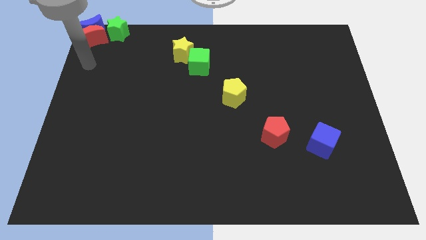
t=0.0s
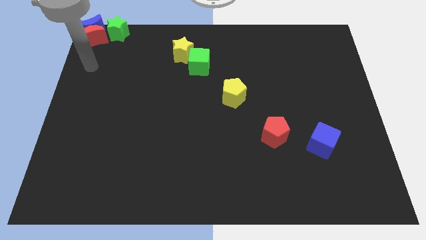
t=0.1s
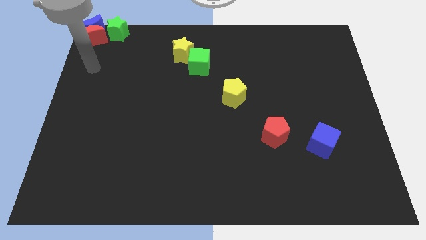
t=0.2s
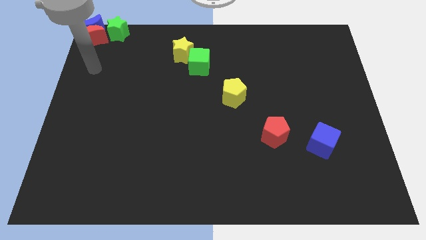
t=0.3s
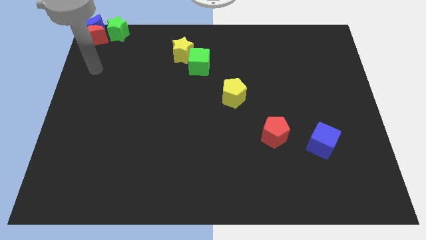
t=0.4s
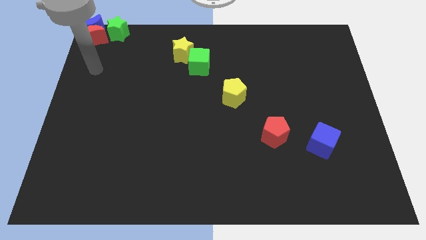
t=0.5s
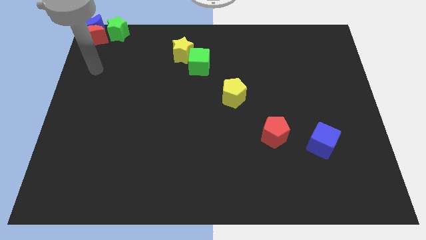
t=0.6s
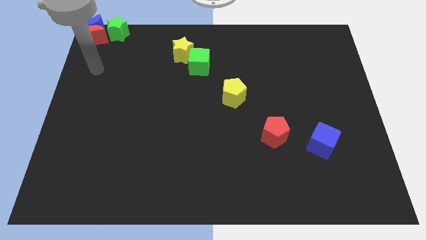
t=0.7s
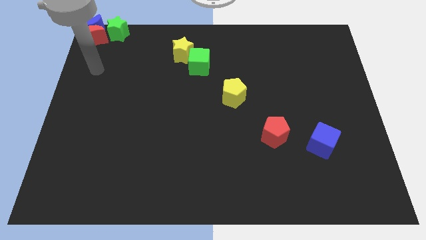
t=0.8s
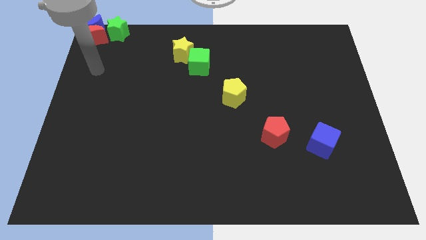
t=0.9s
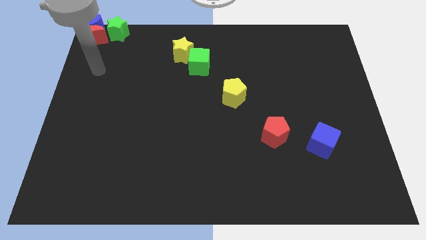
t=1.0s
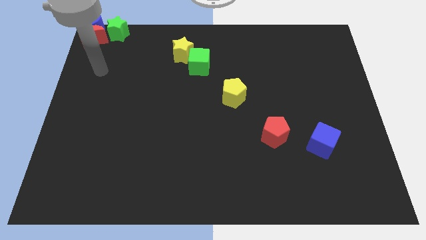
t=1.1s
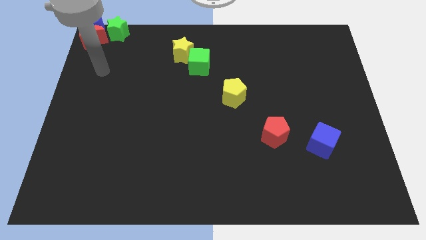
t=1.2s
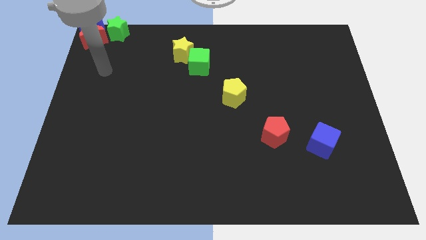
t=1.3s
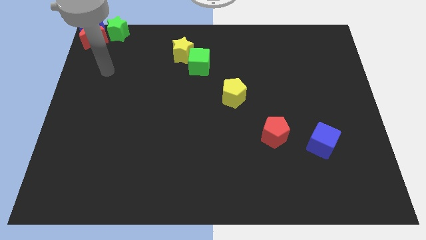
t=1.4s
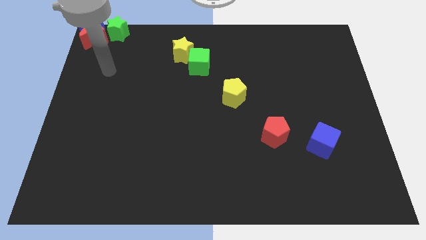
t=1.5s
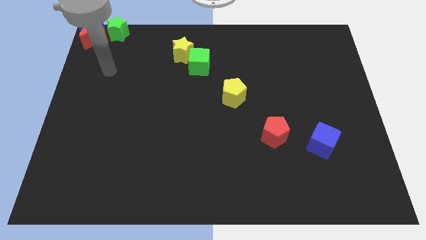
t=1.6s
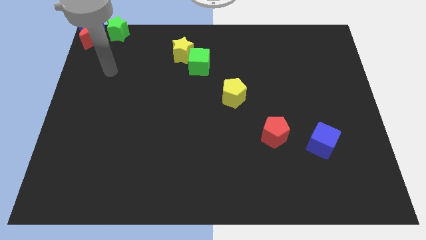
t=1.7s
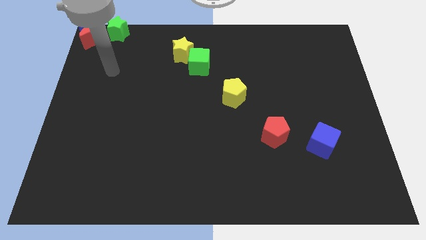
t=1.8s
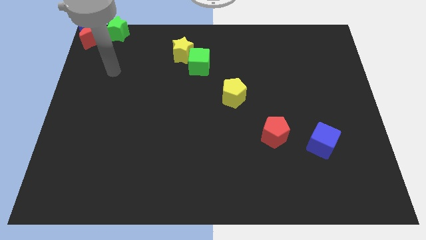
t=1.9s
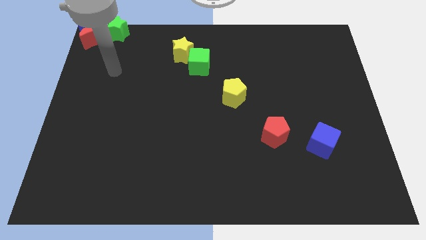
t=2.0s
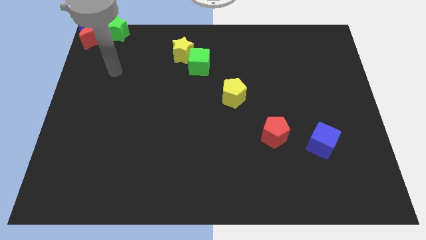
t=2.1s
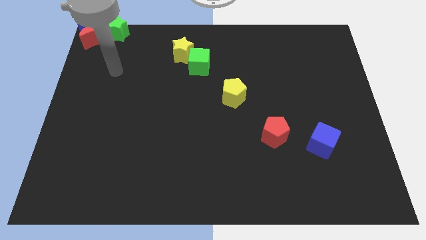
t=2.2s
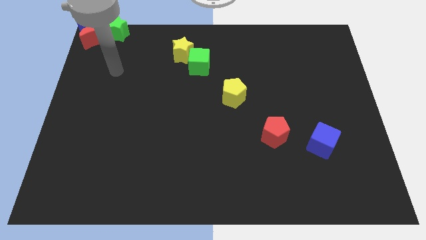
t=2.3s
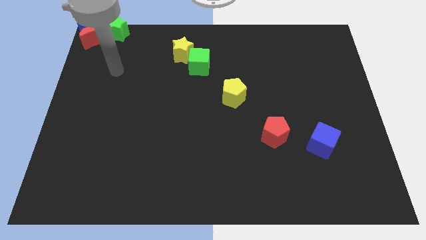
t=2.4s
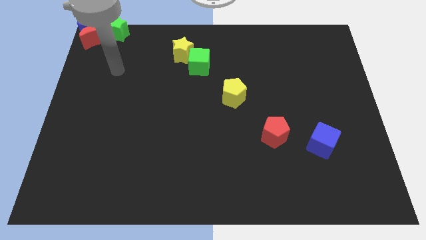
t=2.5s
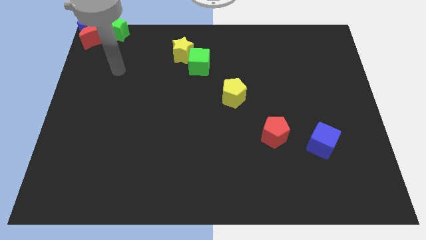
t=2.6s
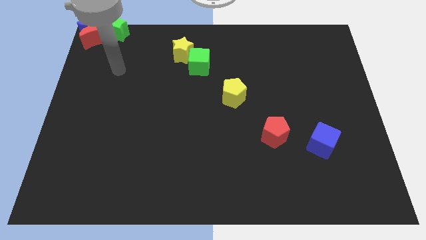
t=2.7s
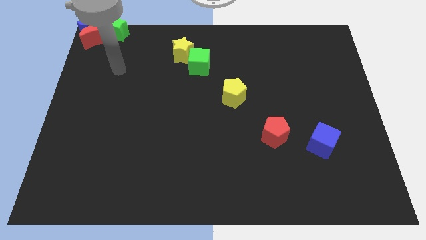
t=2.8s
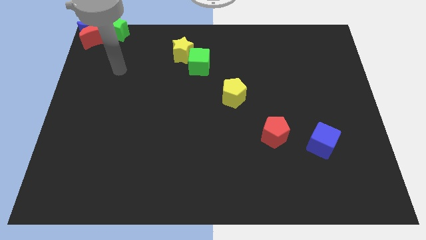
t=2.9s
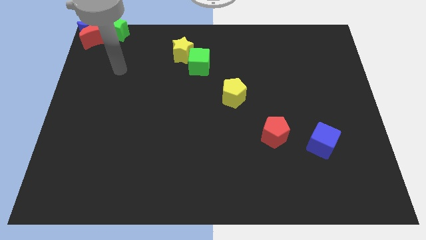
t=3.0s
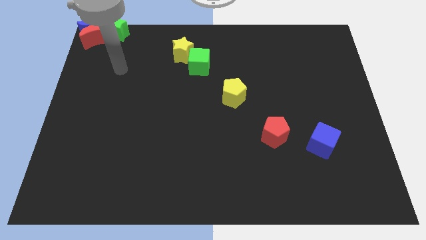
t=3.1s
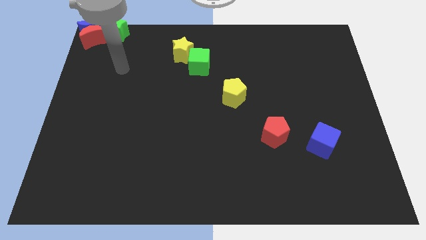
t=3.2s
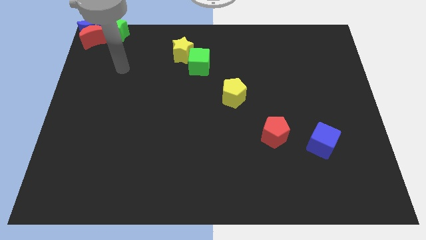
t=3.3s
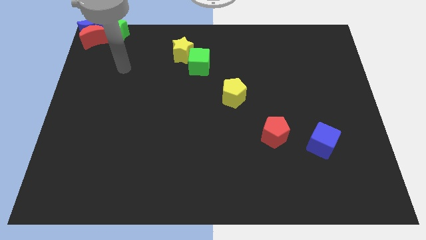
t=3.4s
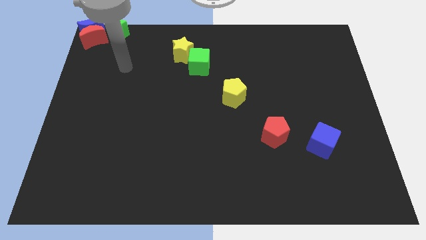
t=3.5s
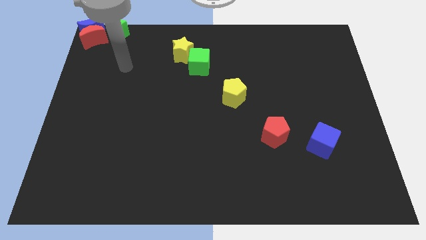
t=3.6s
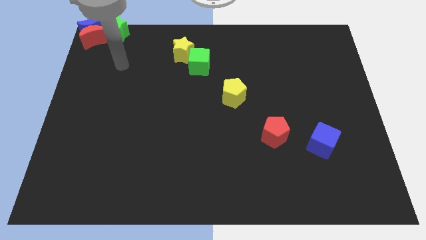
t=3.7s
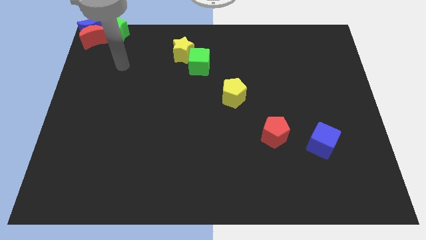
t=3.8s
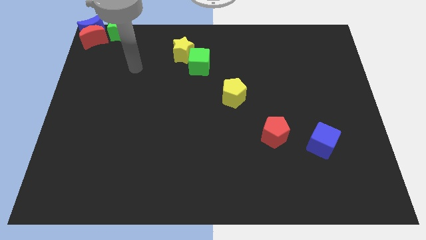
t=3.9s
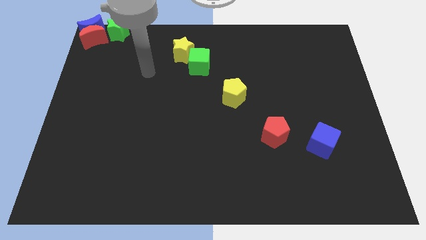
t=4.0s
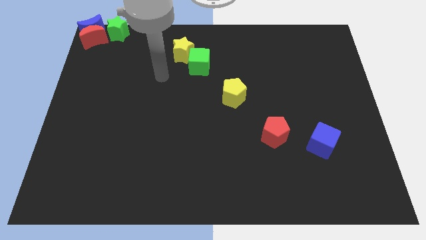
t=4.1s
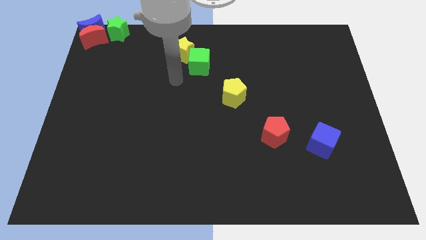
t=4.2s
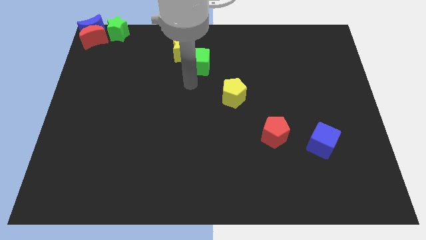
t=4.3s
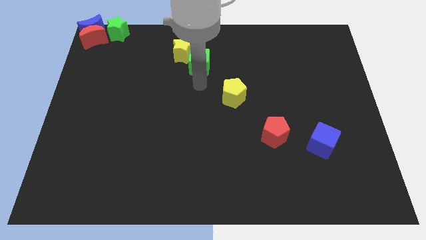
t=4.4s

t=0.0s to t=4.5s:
move your arm to the bottom side of the green cube

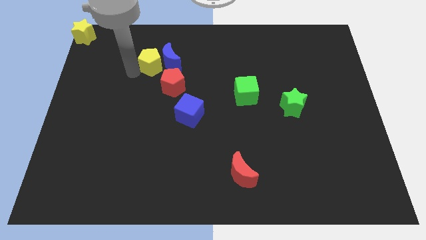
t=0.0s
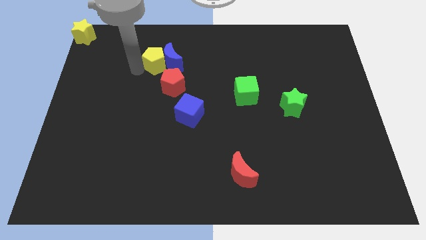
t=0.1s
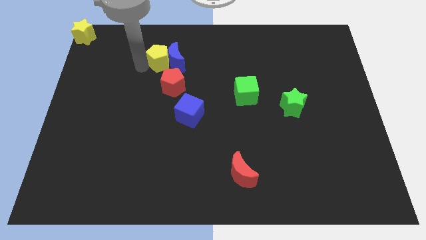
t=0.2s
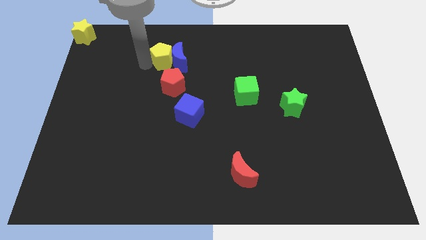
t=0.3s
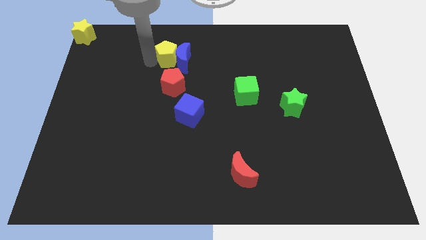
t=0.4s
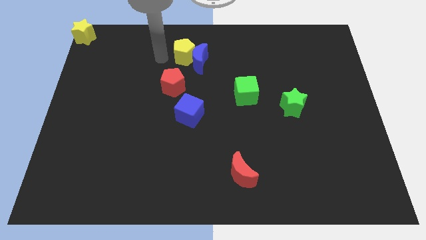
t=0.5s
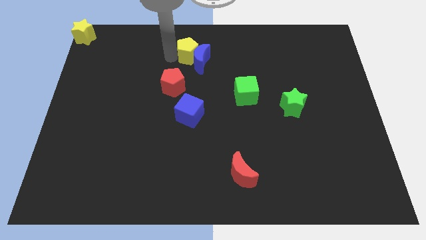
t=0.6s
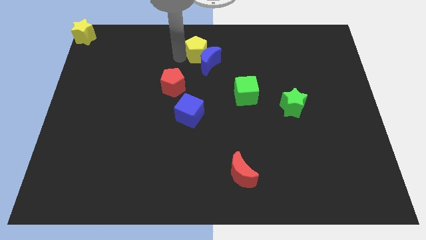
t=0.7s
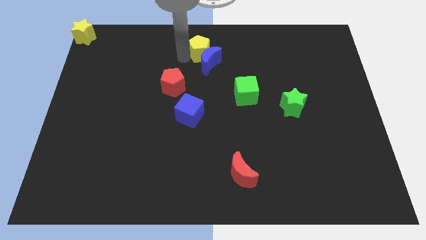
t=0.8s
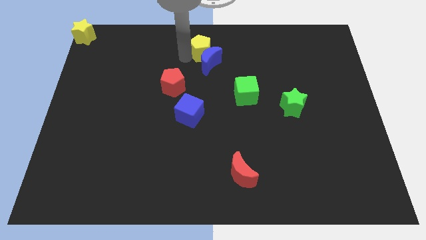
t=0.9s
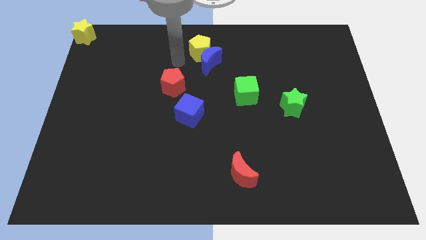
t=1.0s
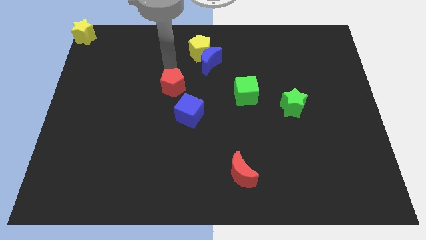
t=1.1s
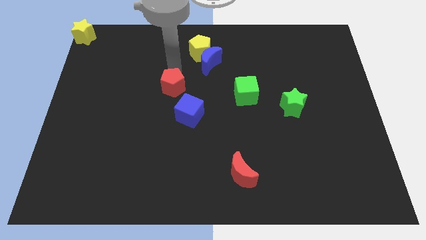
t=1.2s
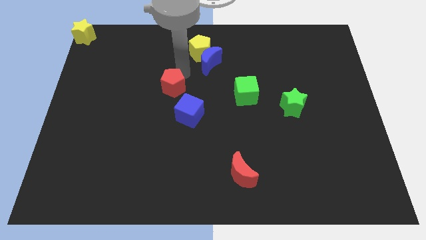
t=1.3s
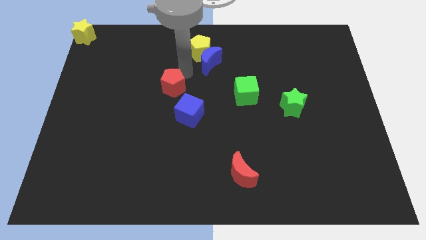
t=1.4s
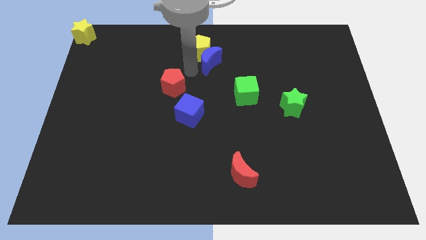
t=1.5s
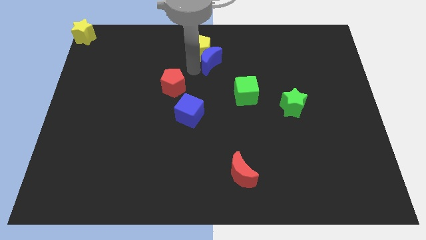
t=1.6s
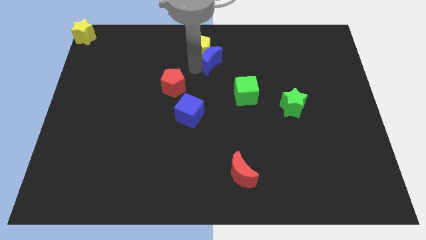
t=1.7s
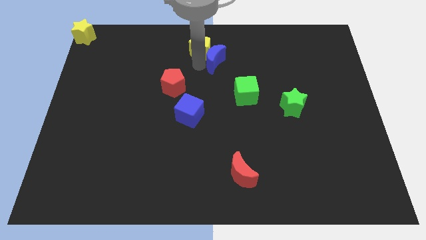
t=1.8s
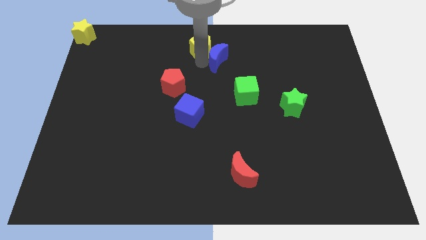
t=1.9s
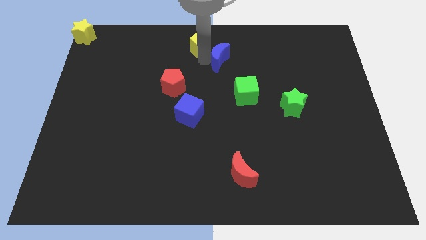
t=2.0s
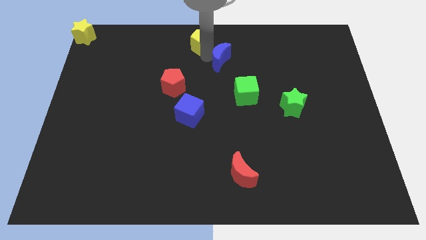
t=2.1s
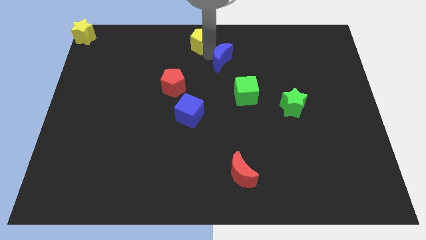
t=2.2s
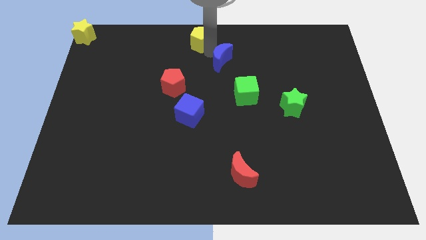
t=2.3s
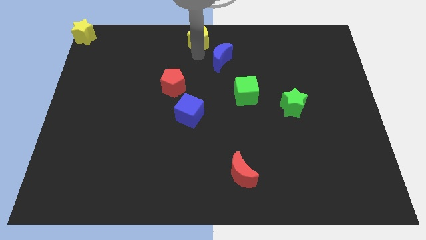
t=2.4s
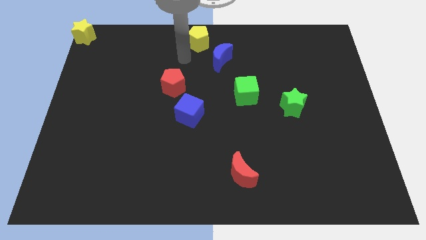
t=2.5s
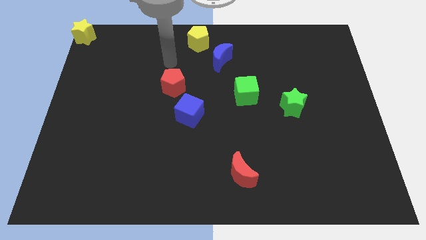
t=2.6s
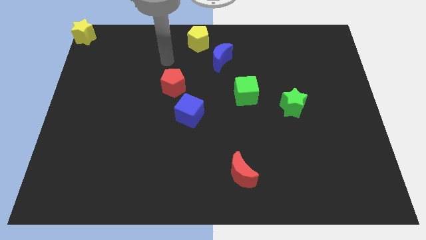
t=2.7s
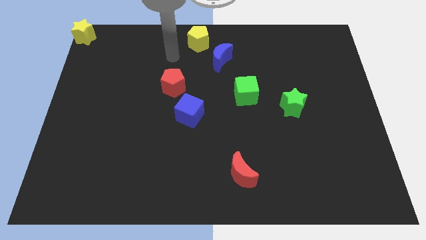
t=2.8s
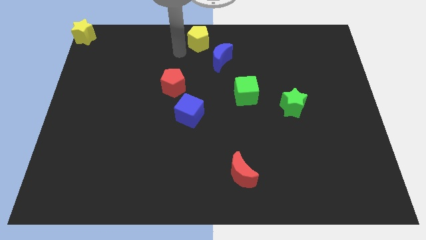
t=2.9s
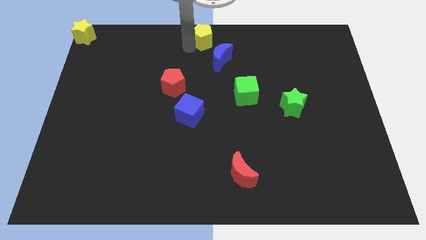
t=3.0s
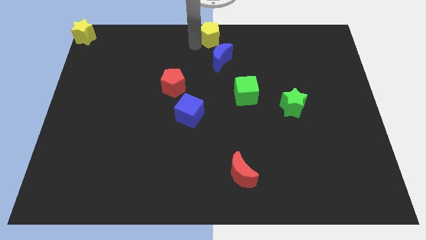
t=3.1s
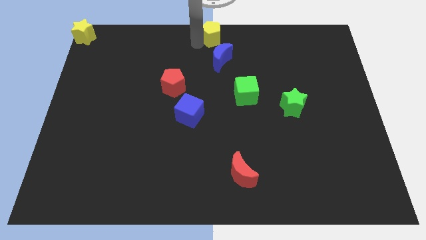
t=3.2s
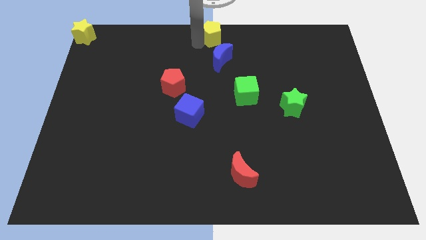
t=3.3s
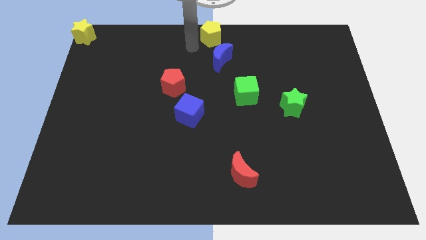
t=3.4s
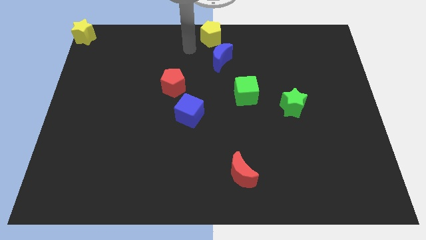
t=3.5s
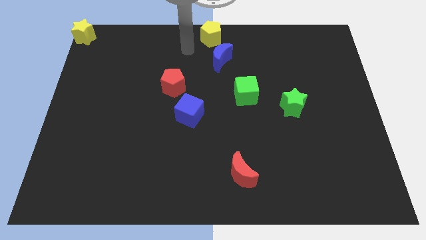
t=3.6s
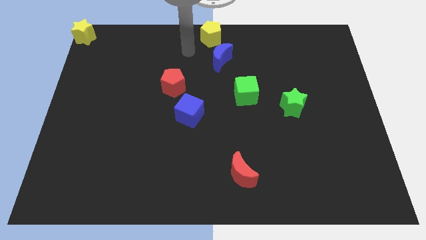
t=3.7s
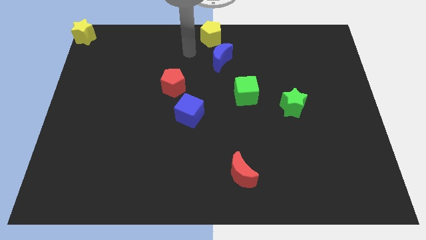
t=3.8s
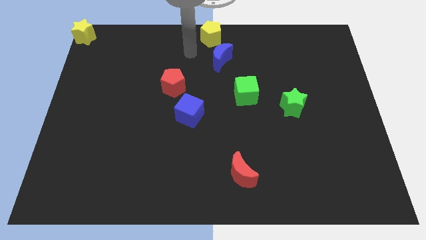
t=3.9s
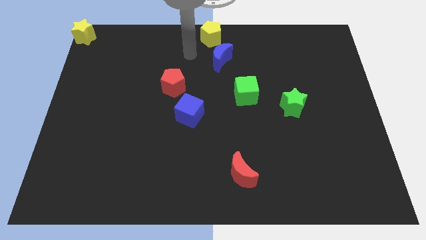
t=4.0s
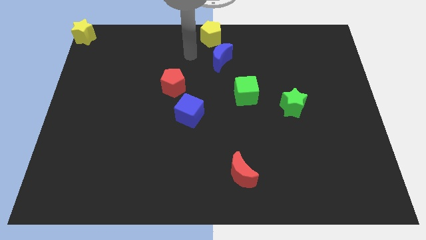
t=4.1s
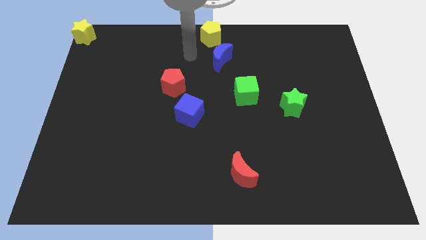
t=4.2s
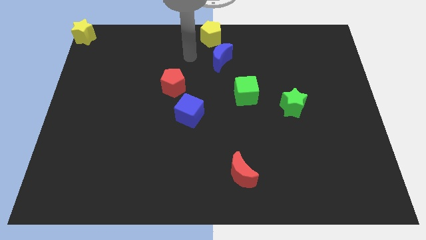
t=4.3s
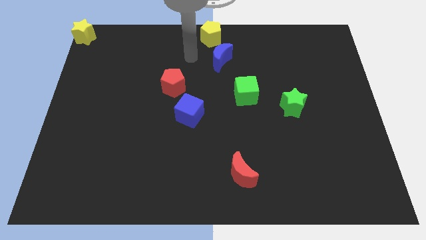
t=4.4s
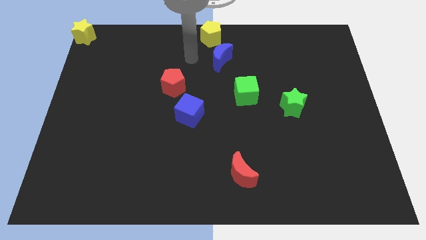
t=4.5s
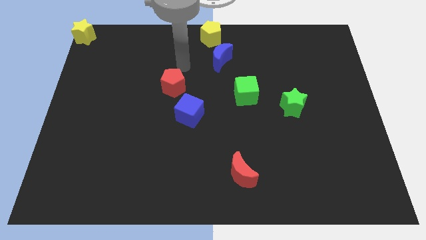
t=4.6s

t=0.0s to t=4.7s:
place the yellow pentagon to the top center
